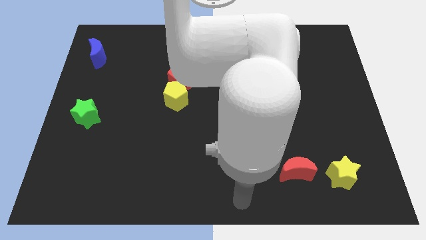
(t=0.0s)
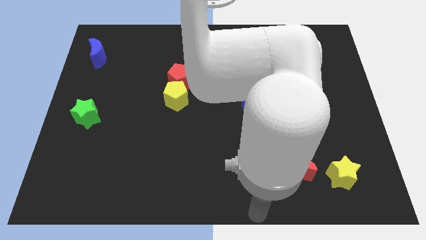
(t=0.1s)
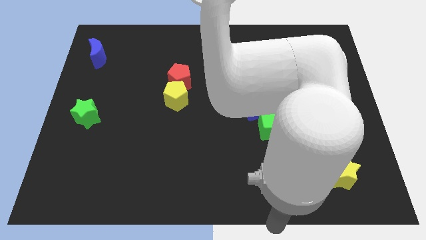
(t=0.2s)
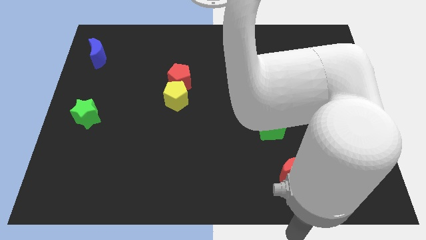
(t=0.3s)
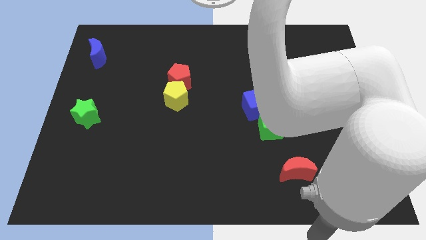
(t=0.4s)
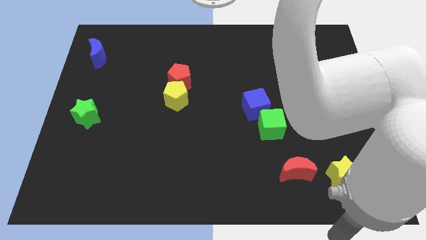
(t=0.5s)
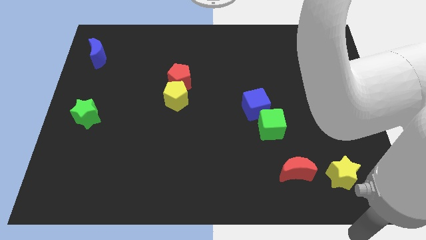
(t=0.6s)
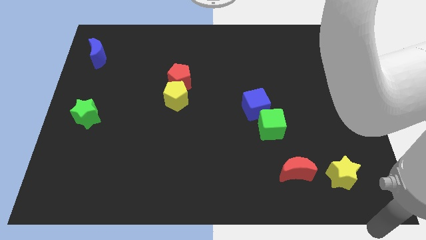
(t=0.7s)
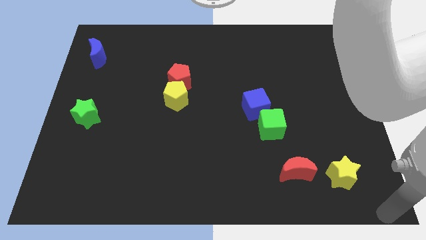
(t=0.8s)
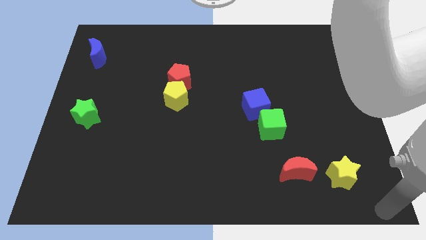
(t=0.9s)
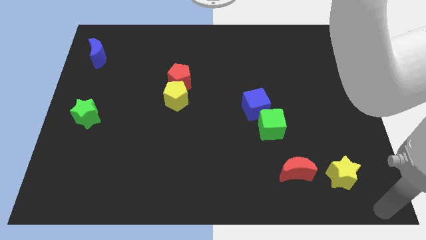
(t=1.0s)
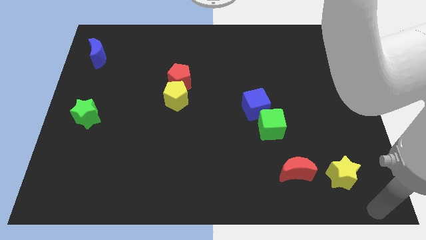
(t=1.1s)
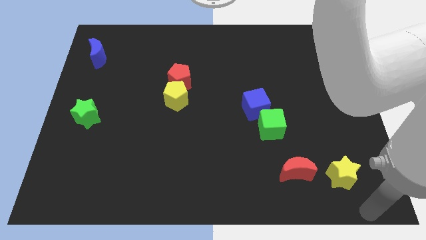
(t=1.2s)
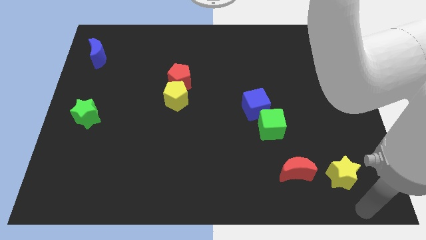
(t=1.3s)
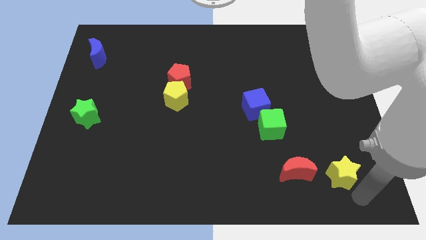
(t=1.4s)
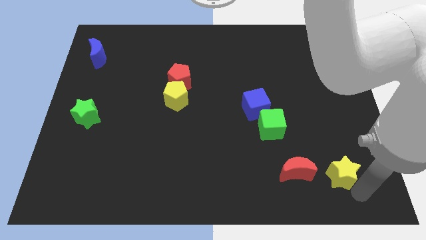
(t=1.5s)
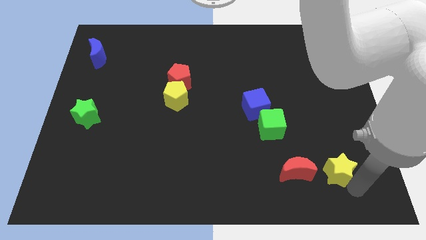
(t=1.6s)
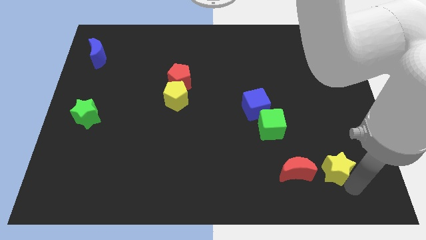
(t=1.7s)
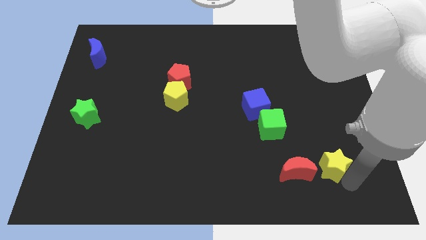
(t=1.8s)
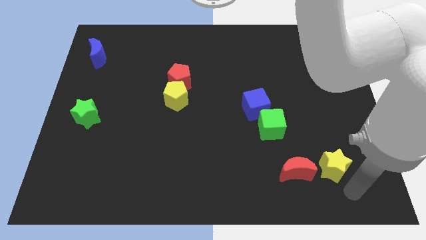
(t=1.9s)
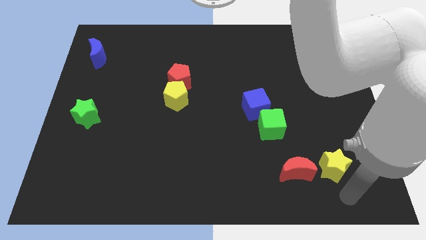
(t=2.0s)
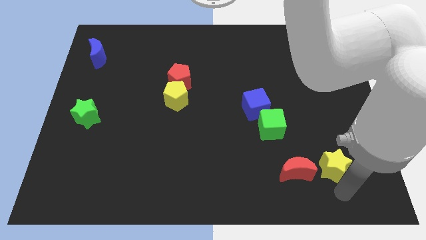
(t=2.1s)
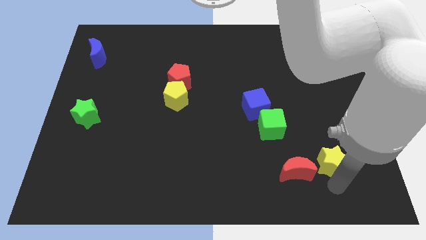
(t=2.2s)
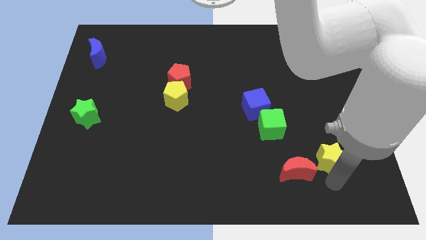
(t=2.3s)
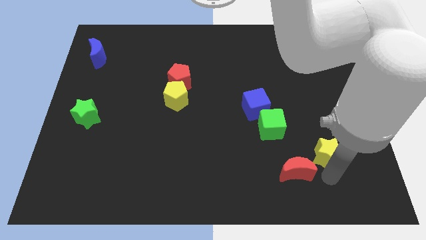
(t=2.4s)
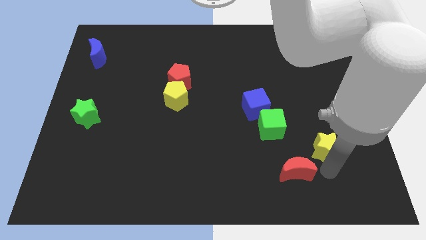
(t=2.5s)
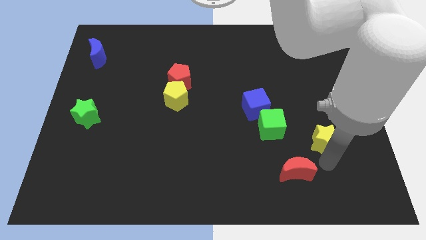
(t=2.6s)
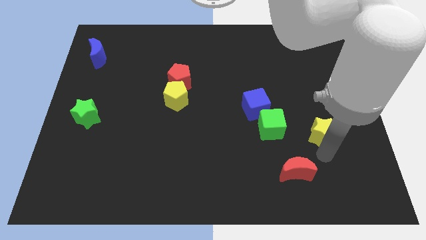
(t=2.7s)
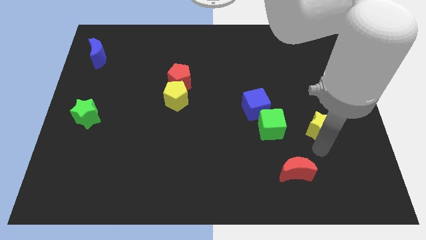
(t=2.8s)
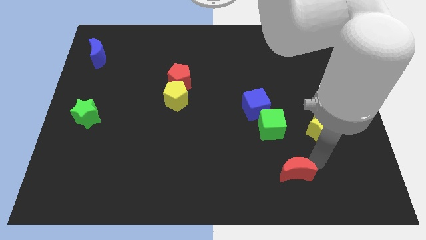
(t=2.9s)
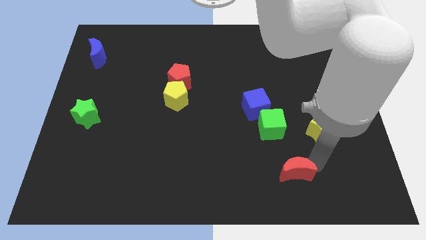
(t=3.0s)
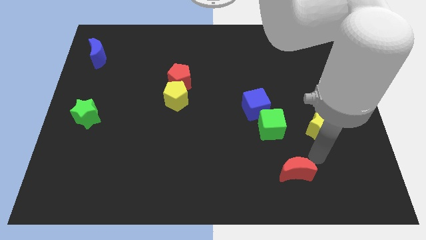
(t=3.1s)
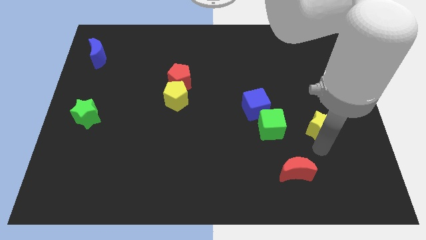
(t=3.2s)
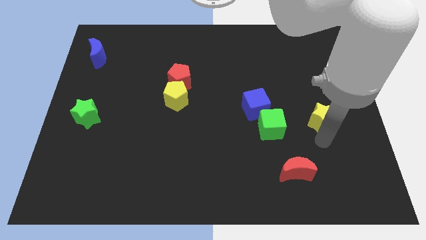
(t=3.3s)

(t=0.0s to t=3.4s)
slide the yellow star diagonally top right to the red moon

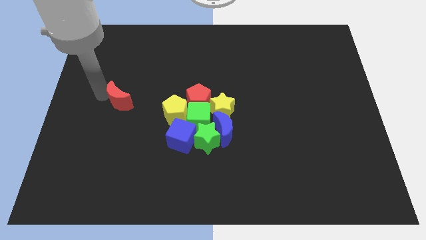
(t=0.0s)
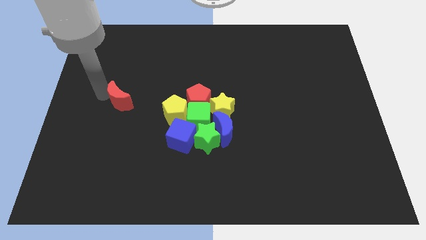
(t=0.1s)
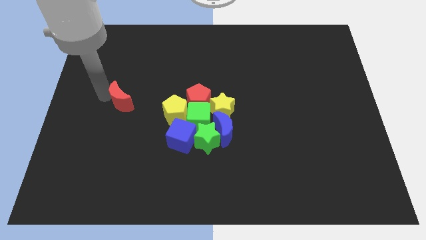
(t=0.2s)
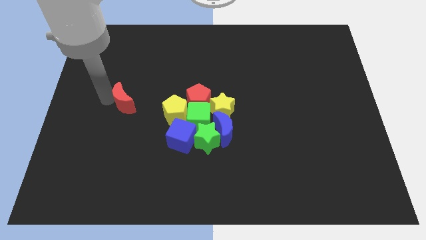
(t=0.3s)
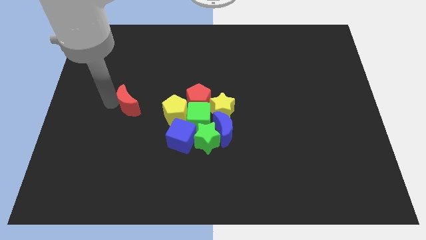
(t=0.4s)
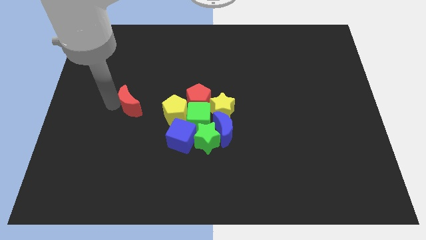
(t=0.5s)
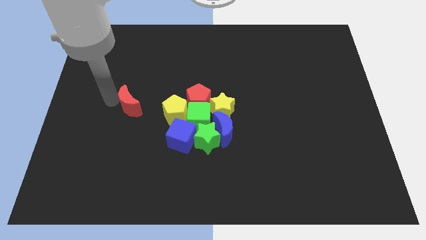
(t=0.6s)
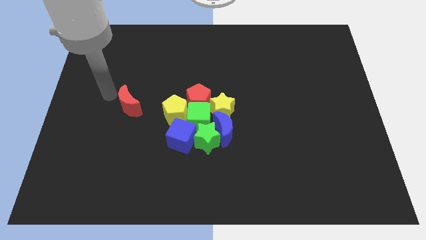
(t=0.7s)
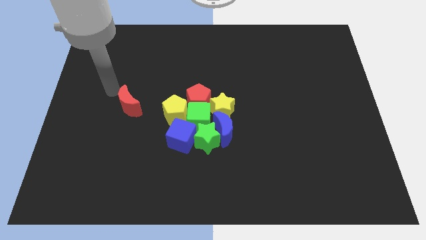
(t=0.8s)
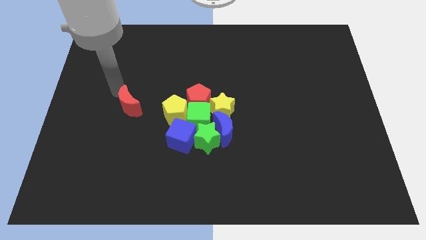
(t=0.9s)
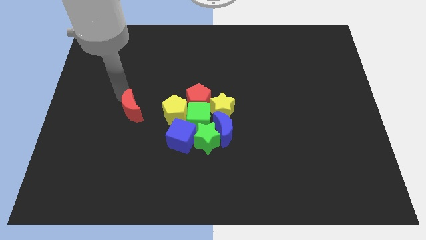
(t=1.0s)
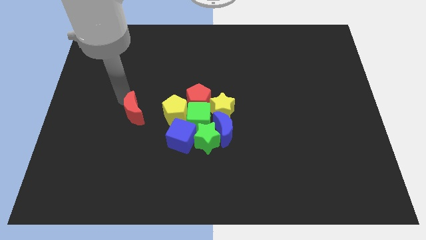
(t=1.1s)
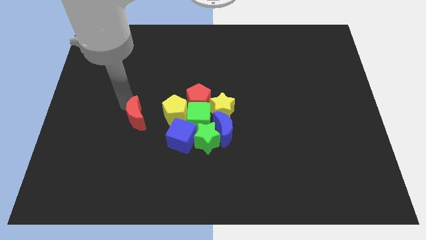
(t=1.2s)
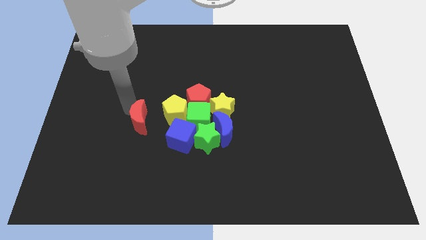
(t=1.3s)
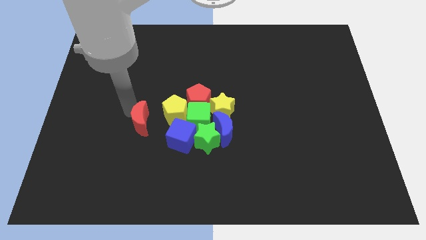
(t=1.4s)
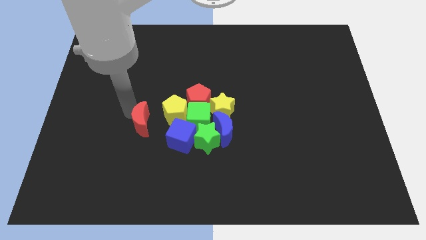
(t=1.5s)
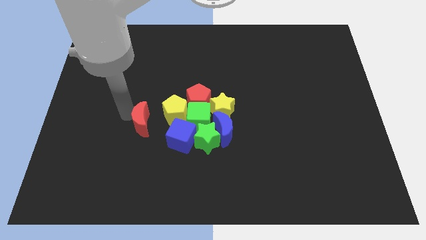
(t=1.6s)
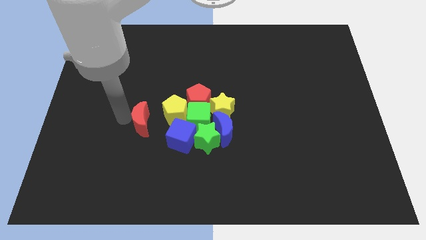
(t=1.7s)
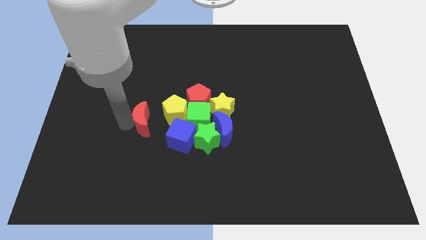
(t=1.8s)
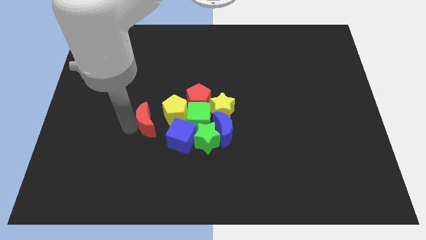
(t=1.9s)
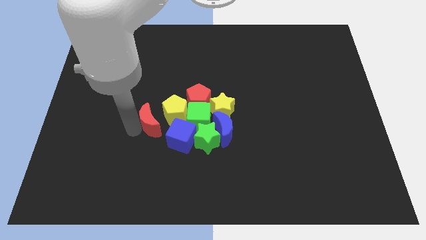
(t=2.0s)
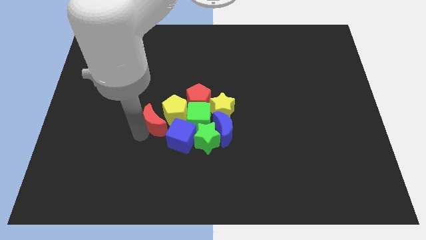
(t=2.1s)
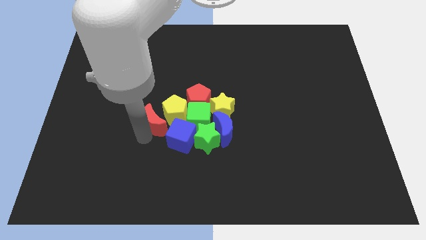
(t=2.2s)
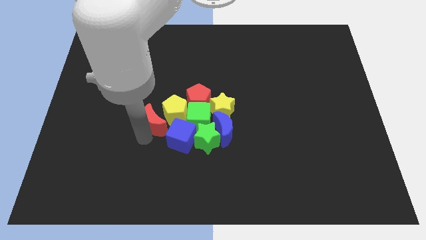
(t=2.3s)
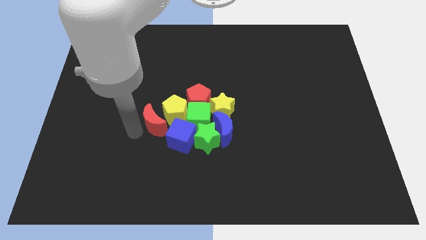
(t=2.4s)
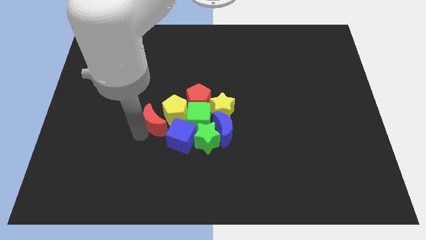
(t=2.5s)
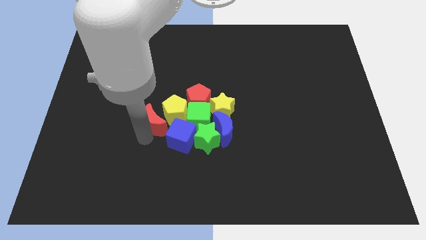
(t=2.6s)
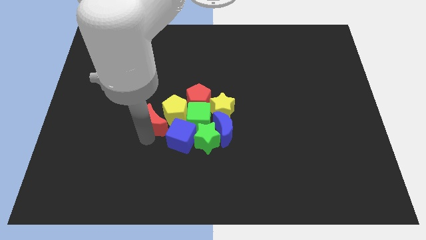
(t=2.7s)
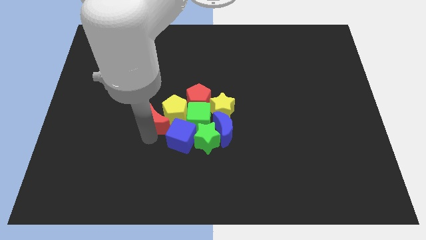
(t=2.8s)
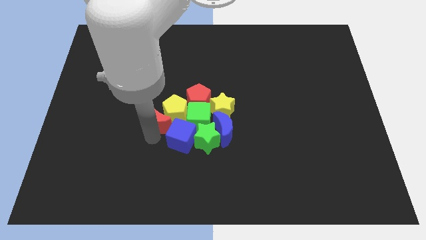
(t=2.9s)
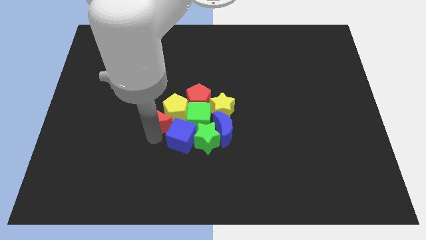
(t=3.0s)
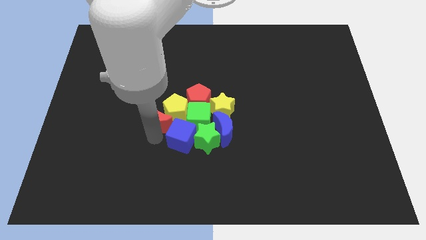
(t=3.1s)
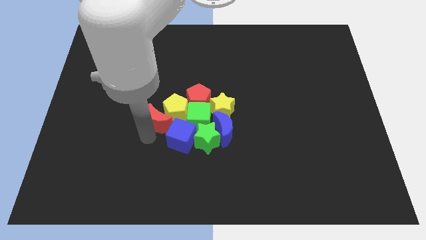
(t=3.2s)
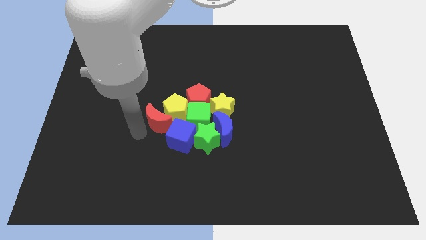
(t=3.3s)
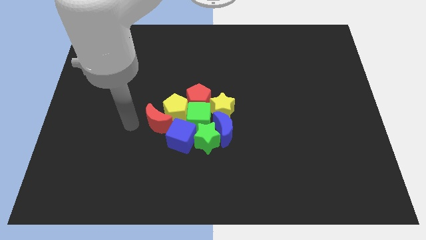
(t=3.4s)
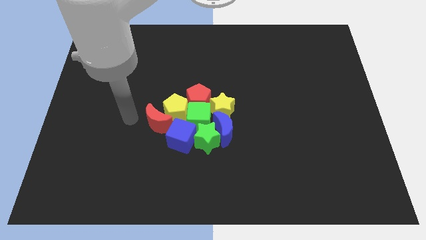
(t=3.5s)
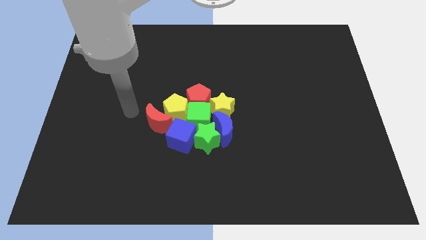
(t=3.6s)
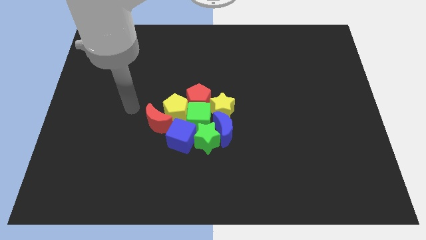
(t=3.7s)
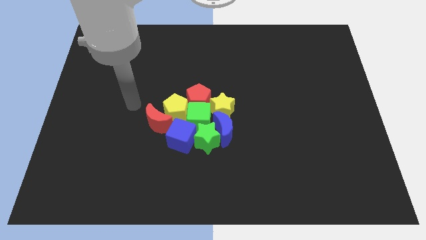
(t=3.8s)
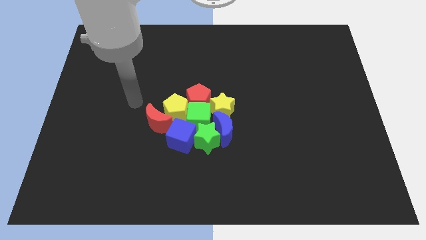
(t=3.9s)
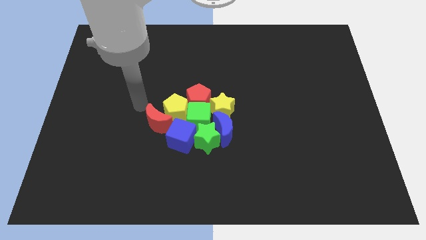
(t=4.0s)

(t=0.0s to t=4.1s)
slide the red moon at the bottom left of the yellow pentagon

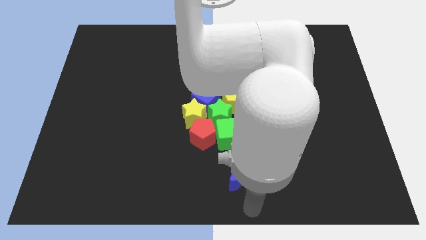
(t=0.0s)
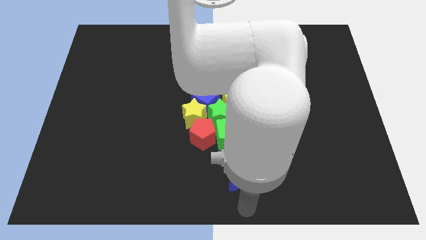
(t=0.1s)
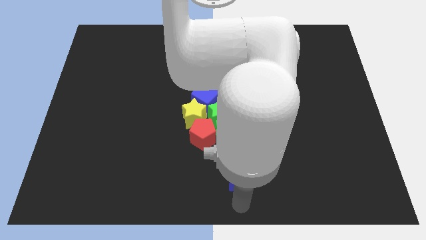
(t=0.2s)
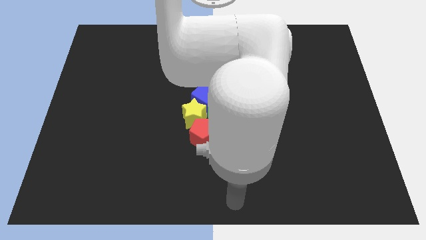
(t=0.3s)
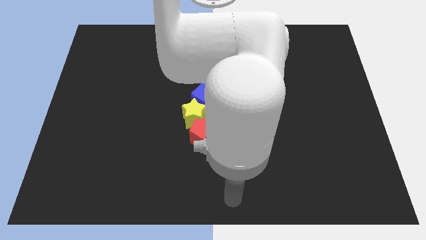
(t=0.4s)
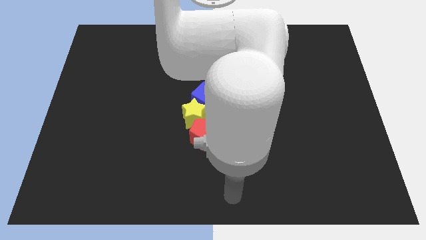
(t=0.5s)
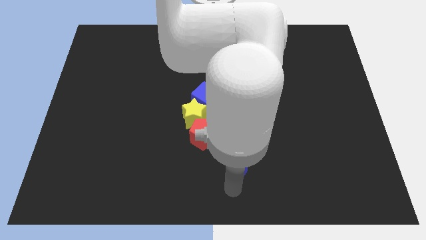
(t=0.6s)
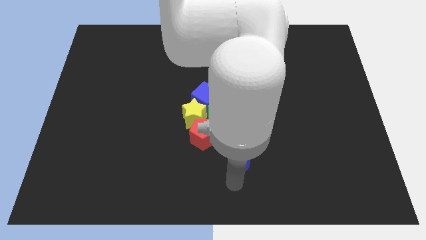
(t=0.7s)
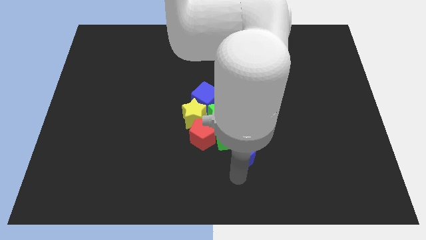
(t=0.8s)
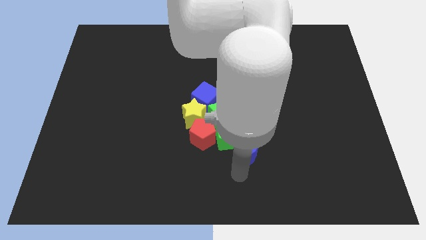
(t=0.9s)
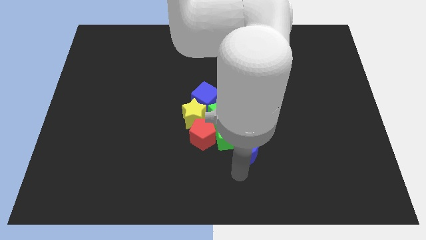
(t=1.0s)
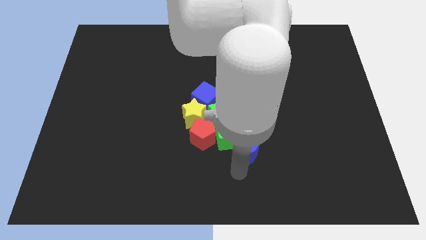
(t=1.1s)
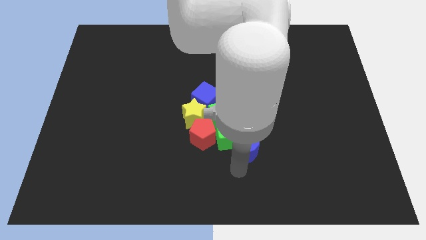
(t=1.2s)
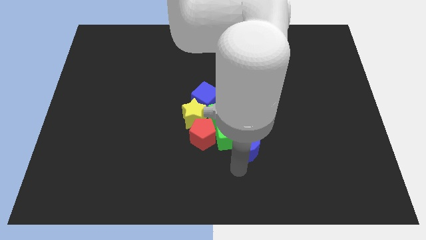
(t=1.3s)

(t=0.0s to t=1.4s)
move blue moon slightly upwards
